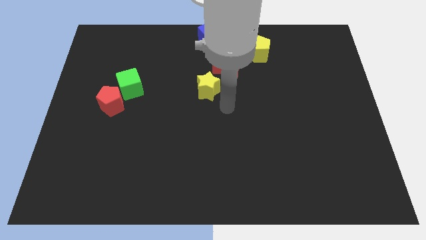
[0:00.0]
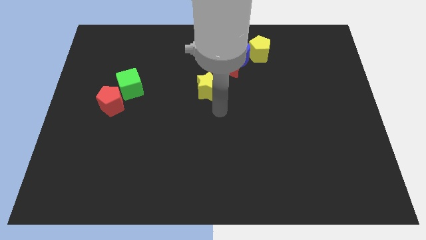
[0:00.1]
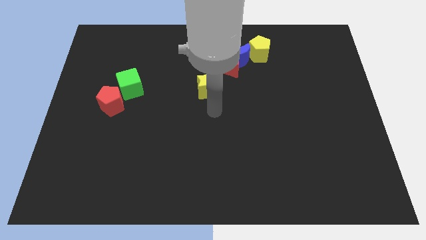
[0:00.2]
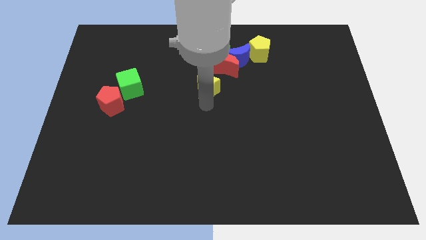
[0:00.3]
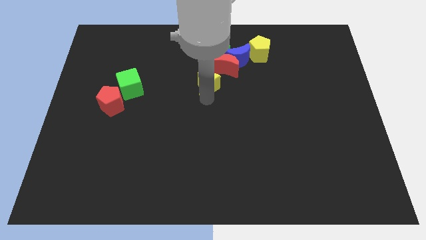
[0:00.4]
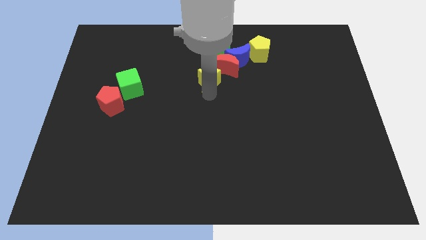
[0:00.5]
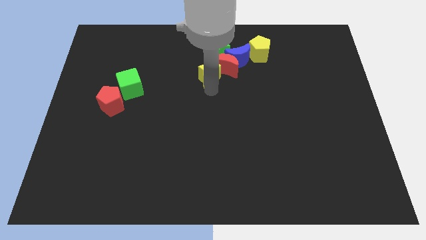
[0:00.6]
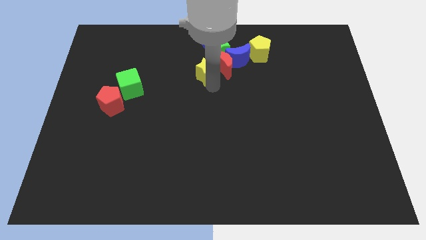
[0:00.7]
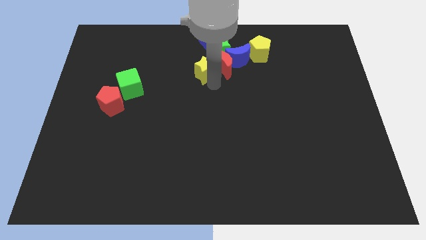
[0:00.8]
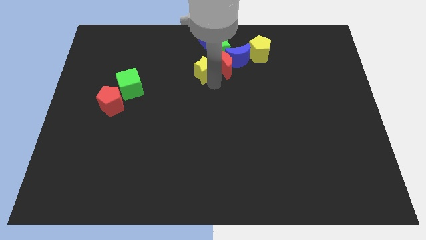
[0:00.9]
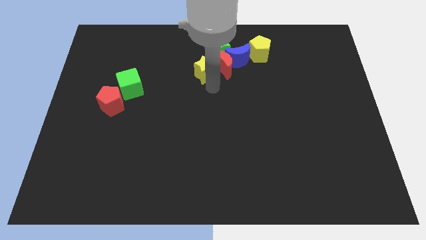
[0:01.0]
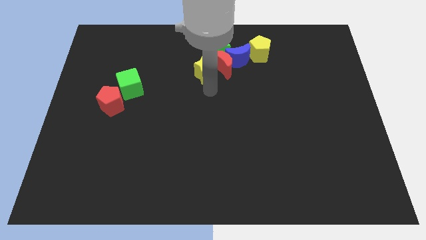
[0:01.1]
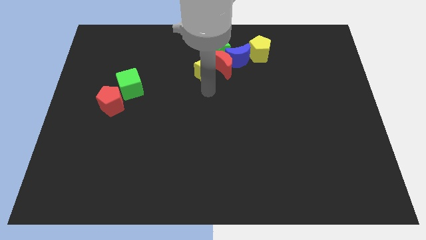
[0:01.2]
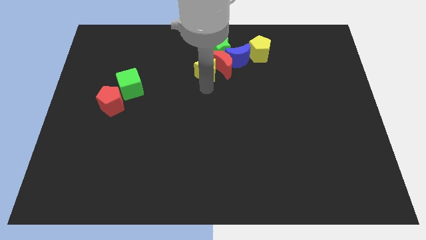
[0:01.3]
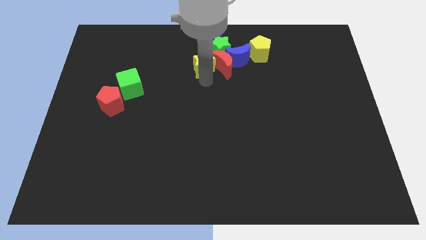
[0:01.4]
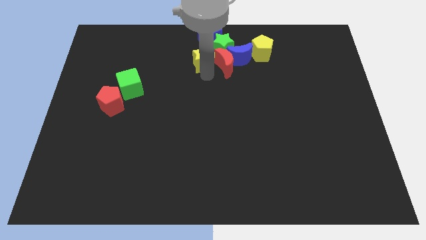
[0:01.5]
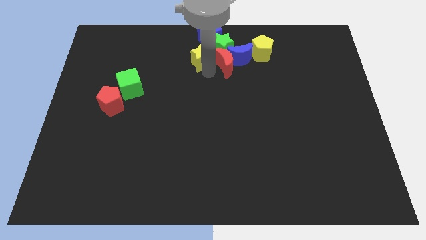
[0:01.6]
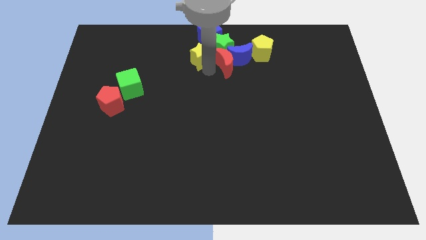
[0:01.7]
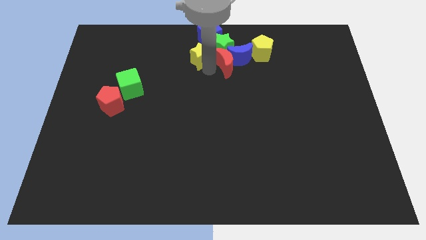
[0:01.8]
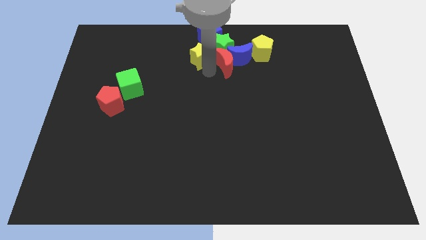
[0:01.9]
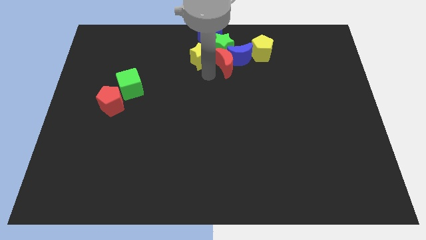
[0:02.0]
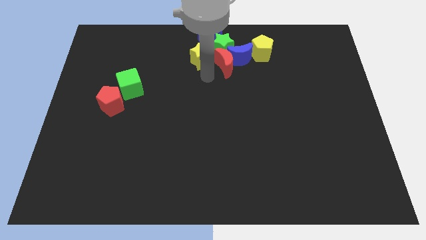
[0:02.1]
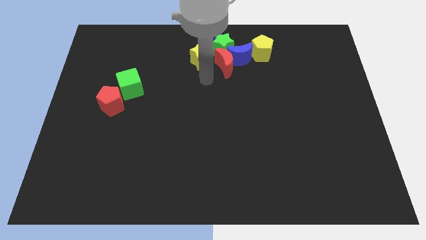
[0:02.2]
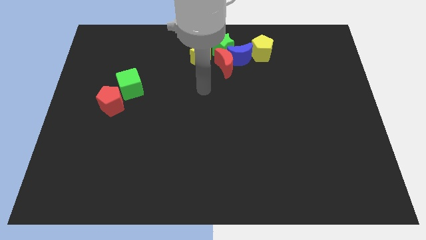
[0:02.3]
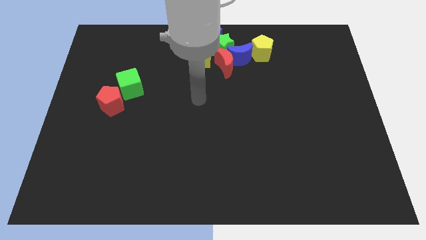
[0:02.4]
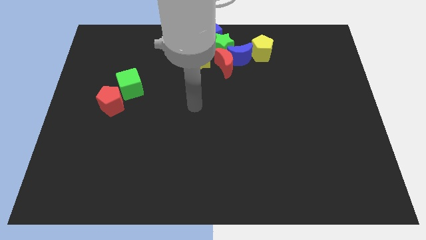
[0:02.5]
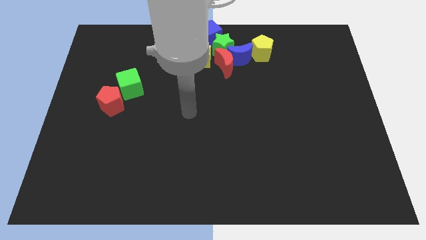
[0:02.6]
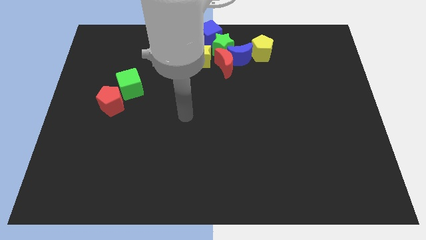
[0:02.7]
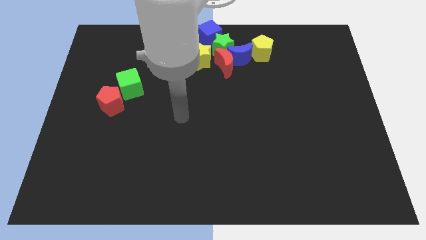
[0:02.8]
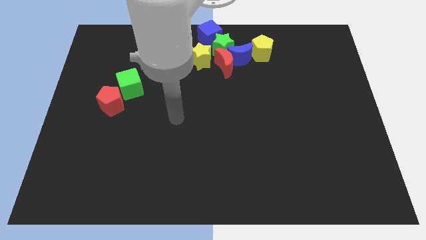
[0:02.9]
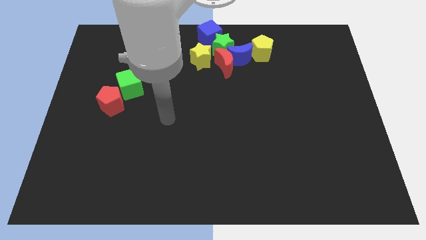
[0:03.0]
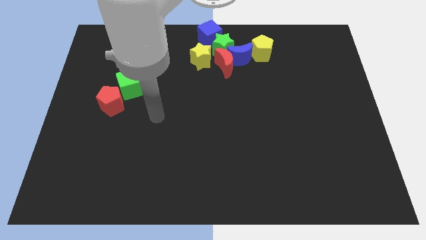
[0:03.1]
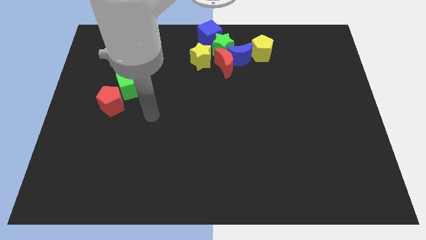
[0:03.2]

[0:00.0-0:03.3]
move yellow star slightly to the top center of the board

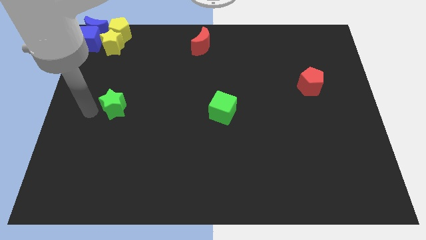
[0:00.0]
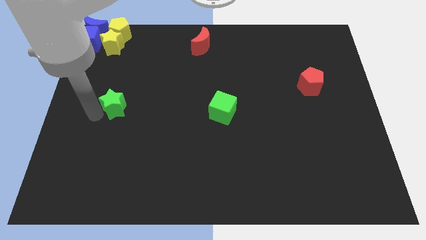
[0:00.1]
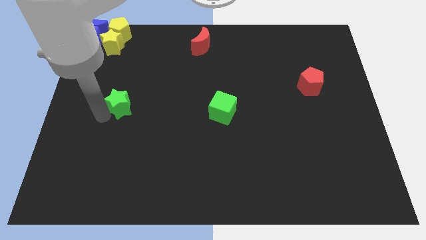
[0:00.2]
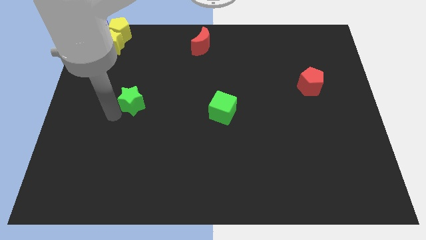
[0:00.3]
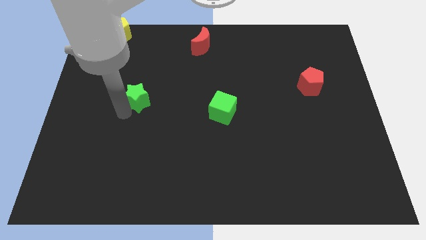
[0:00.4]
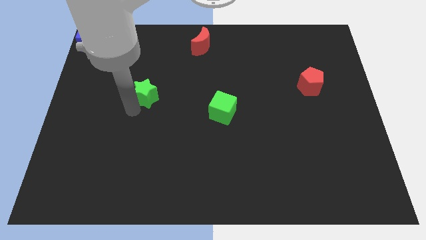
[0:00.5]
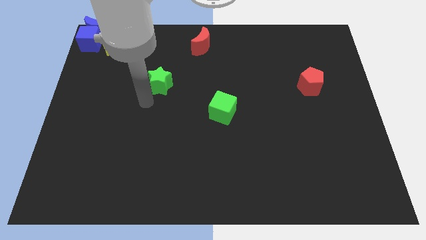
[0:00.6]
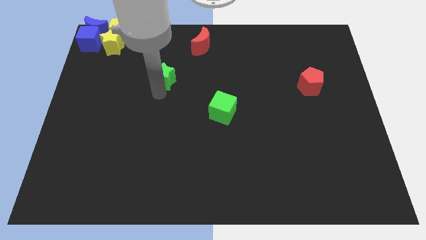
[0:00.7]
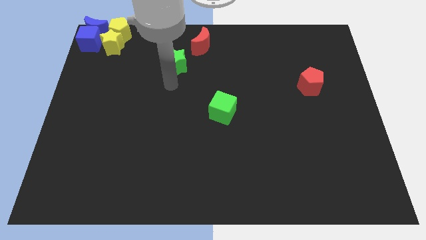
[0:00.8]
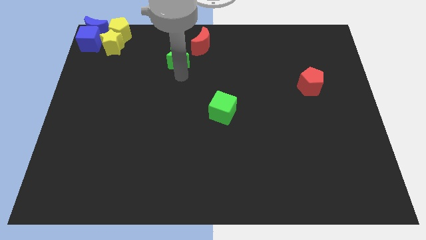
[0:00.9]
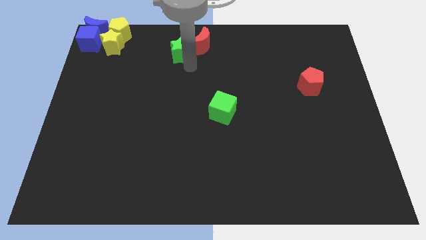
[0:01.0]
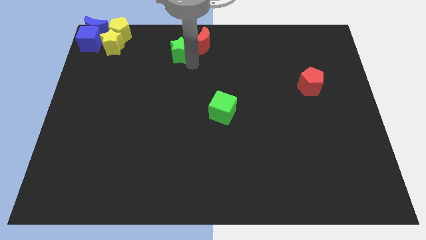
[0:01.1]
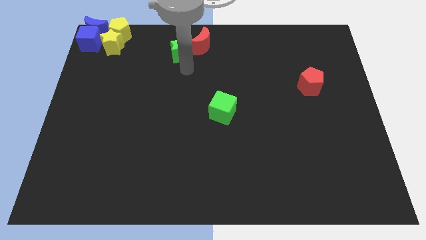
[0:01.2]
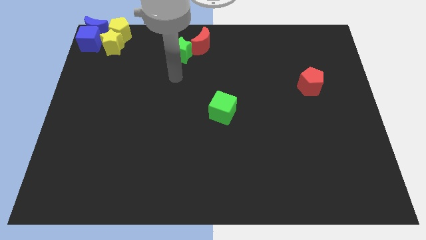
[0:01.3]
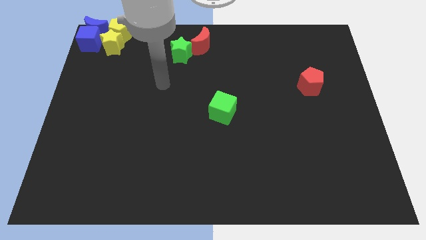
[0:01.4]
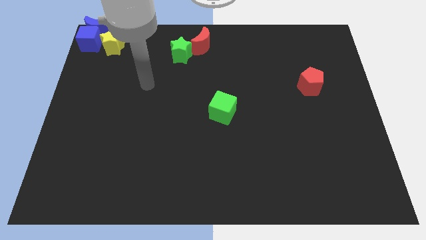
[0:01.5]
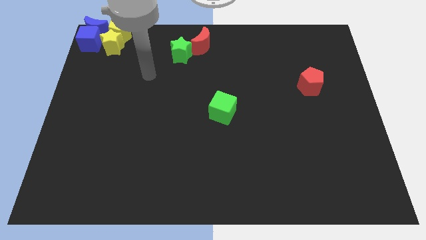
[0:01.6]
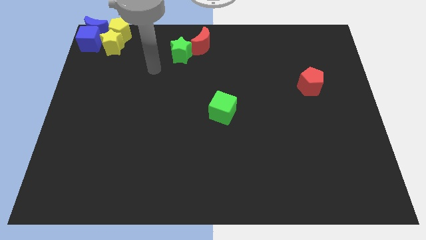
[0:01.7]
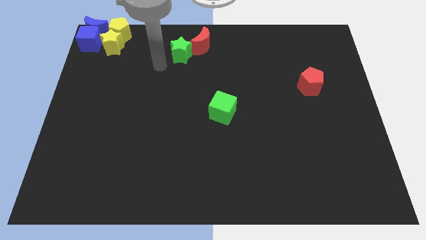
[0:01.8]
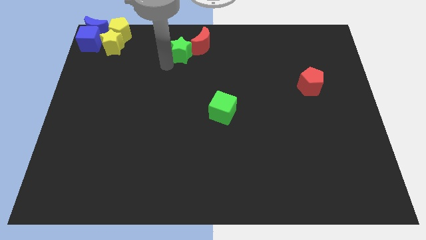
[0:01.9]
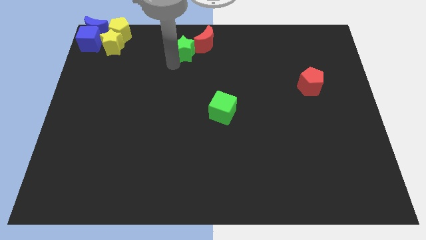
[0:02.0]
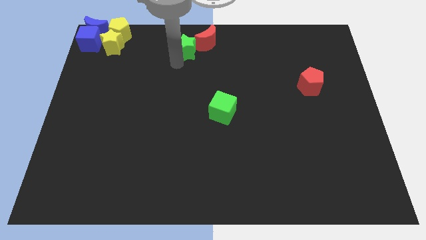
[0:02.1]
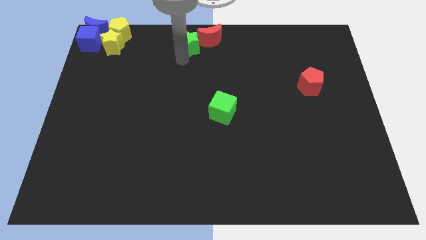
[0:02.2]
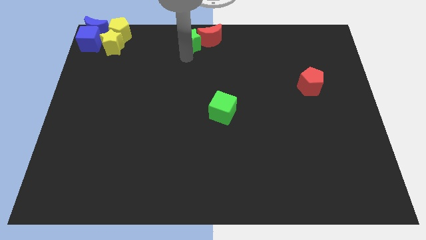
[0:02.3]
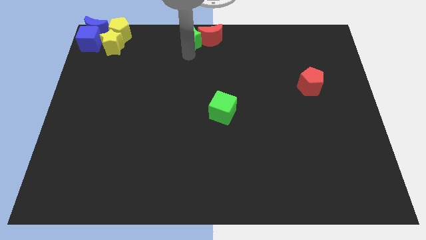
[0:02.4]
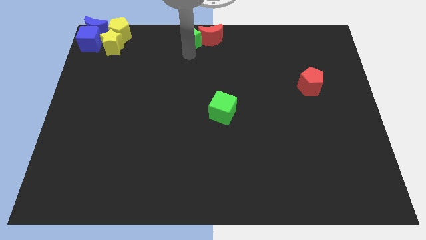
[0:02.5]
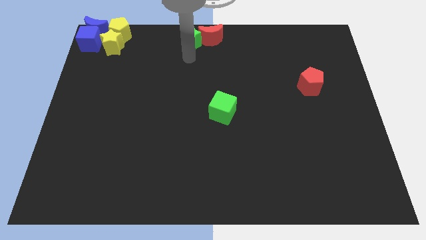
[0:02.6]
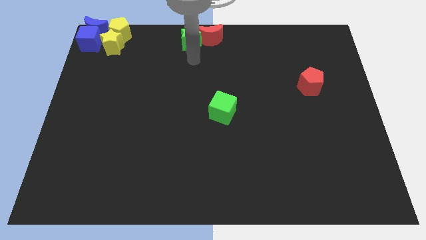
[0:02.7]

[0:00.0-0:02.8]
move the green star into the red crescent

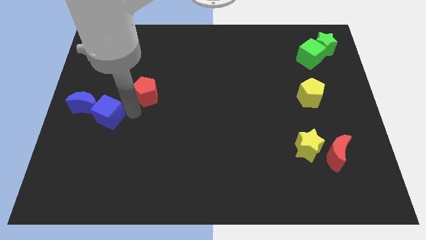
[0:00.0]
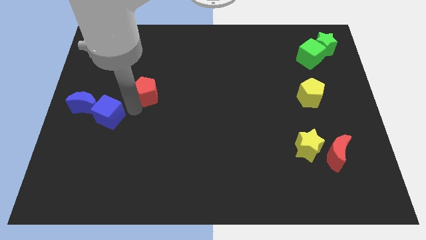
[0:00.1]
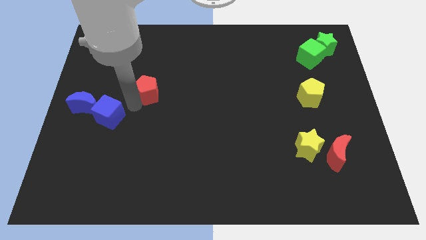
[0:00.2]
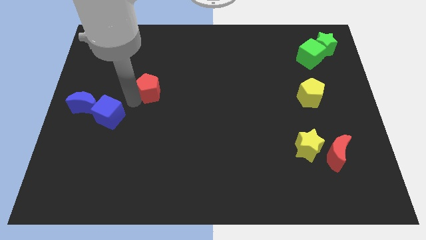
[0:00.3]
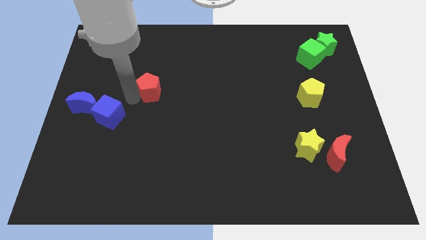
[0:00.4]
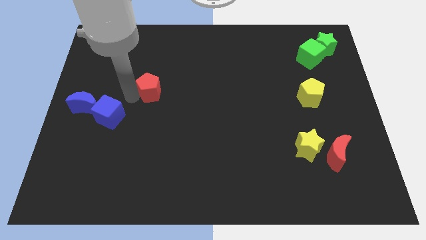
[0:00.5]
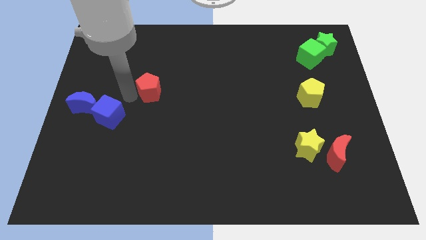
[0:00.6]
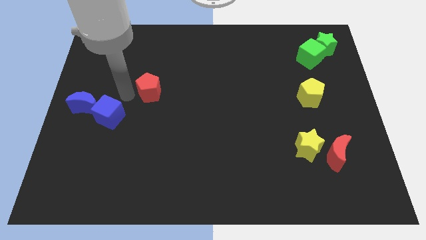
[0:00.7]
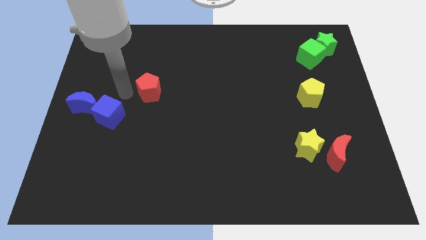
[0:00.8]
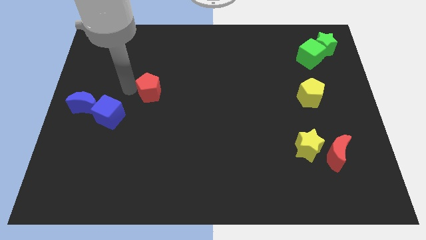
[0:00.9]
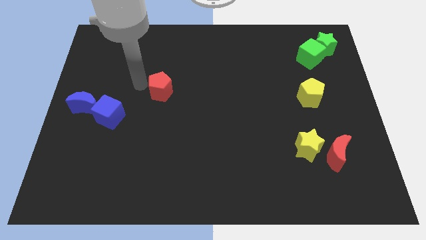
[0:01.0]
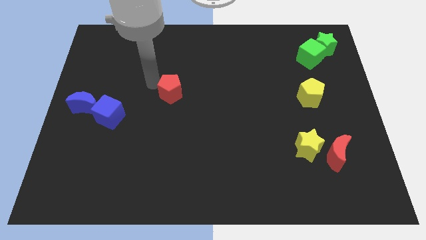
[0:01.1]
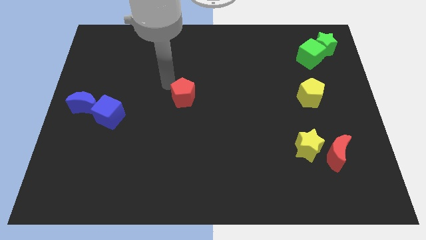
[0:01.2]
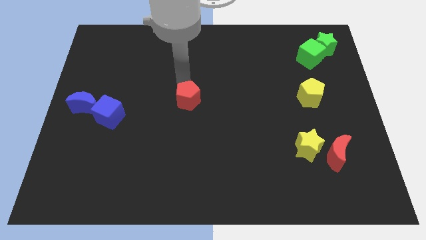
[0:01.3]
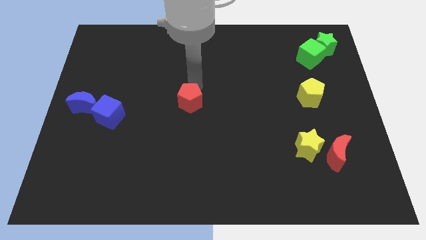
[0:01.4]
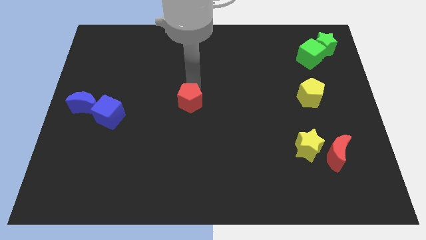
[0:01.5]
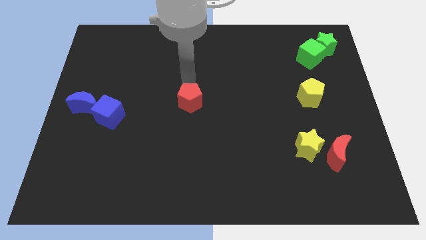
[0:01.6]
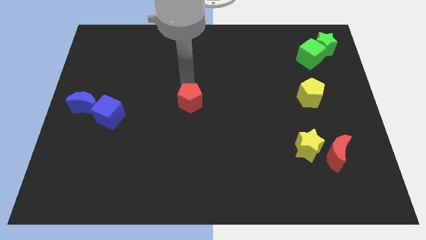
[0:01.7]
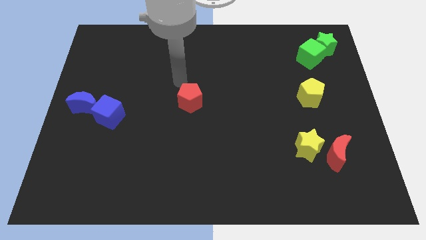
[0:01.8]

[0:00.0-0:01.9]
move the red pentagon to the center of the board

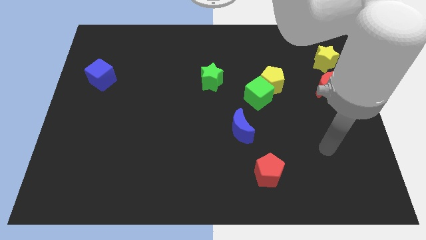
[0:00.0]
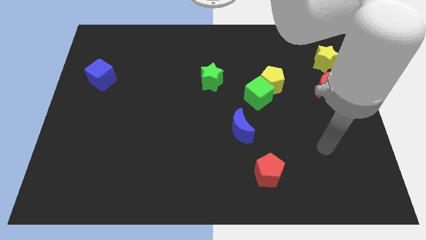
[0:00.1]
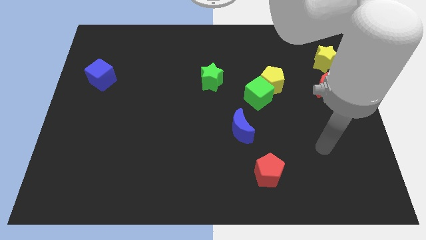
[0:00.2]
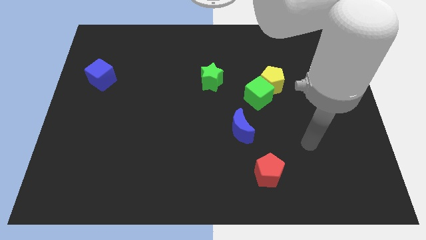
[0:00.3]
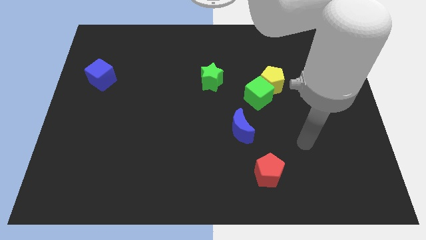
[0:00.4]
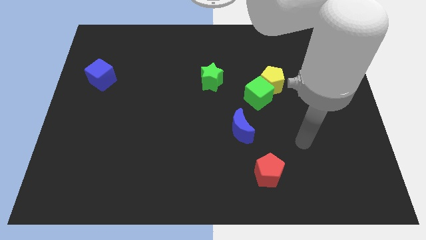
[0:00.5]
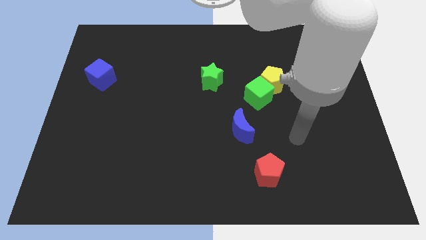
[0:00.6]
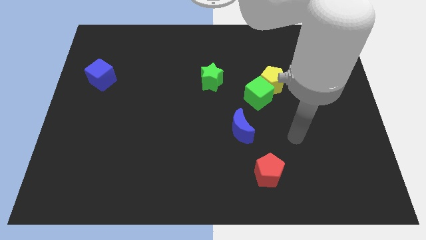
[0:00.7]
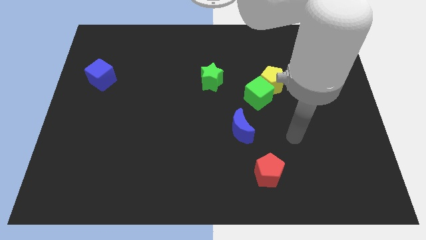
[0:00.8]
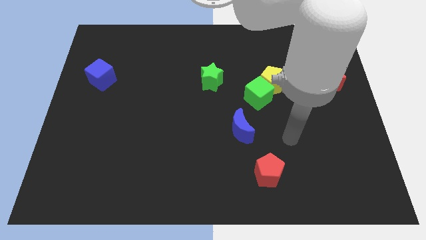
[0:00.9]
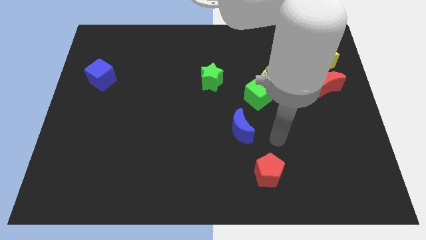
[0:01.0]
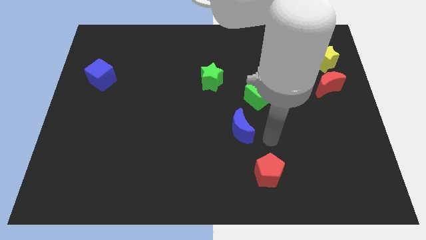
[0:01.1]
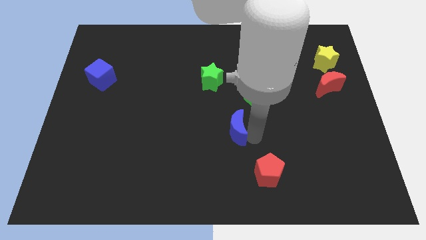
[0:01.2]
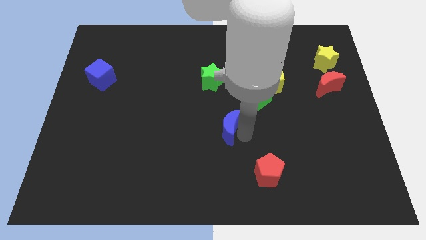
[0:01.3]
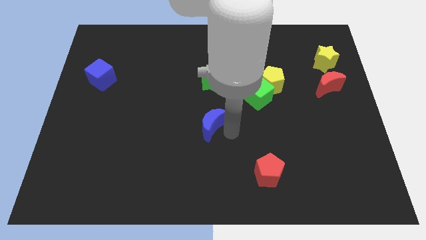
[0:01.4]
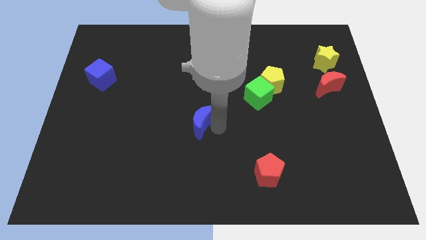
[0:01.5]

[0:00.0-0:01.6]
move the blue crescent vertically below the green star
